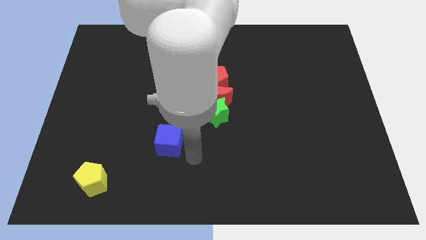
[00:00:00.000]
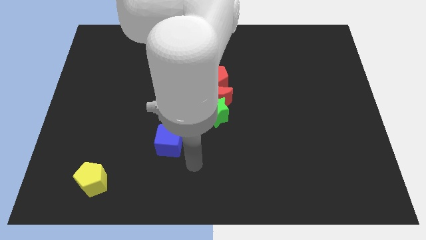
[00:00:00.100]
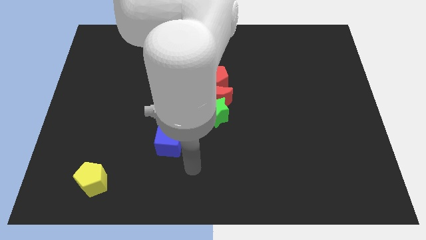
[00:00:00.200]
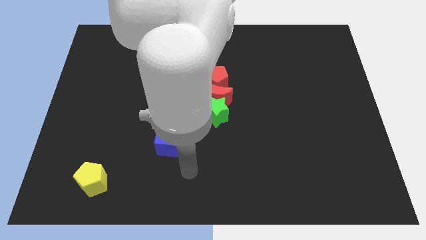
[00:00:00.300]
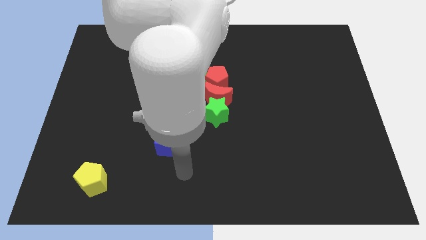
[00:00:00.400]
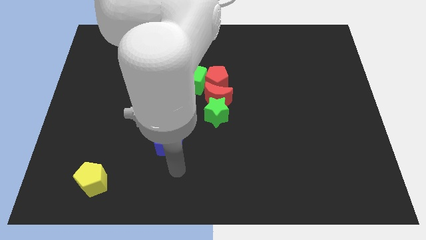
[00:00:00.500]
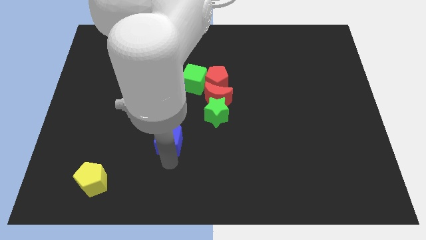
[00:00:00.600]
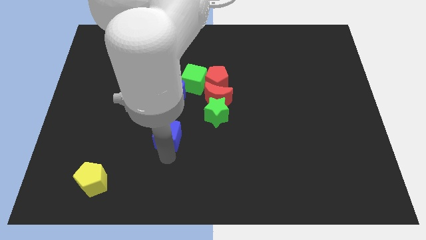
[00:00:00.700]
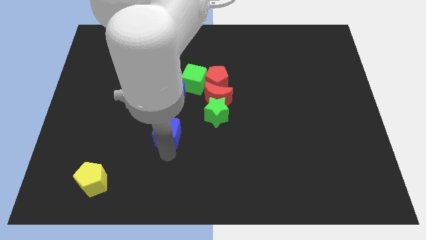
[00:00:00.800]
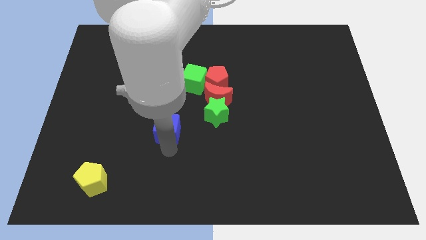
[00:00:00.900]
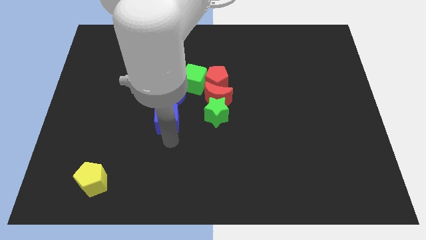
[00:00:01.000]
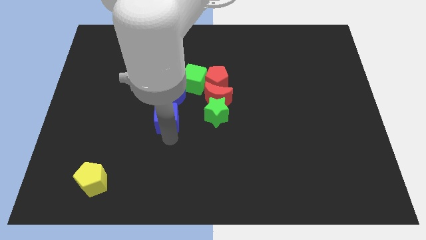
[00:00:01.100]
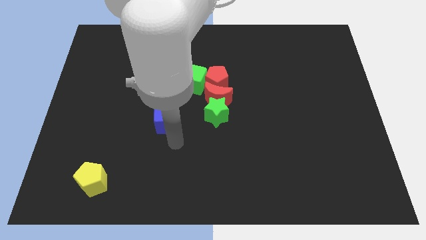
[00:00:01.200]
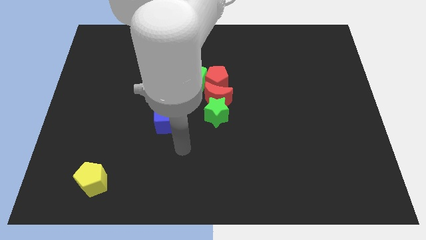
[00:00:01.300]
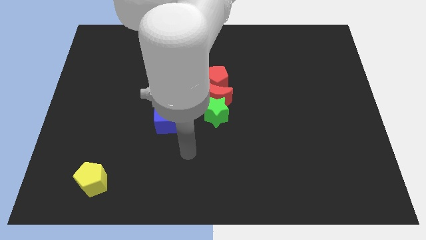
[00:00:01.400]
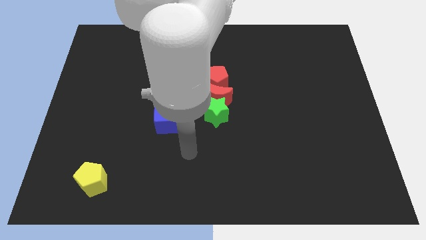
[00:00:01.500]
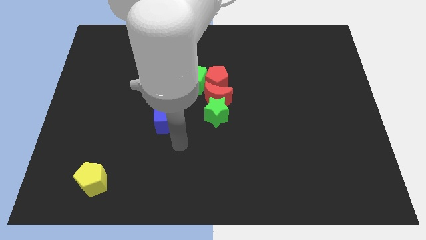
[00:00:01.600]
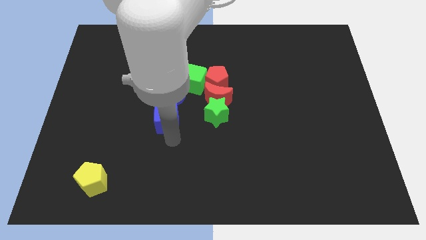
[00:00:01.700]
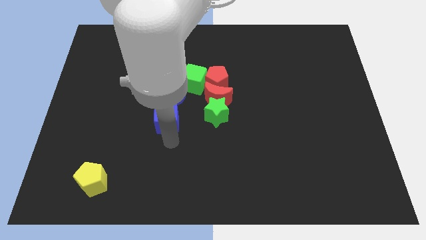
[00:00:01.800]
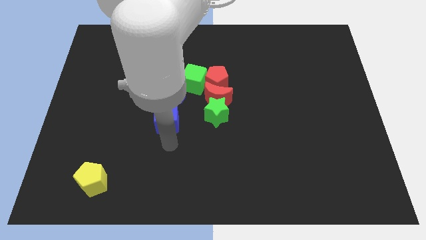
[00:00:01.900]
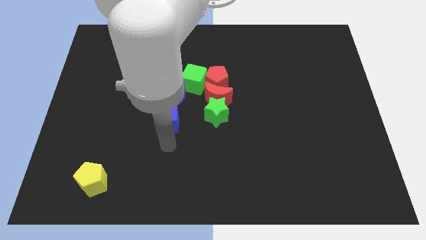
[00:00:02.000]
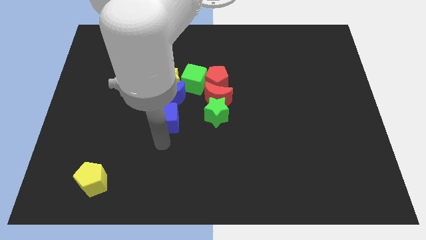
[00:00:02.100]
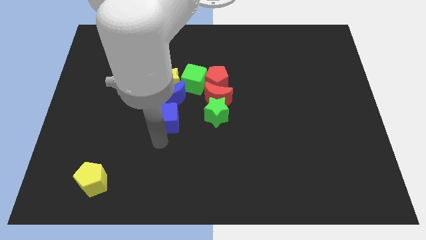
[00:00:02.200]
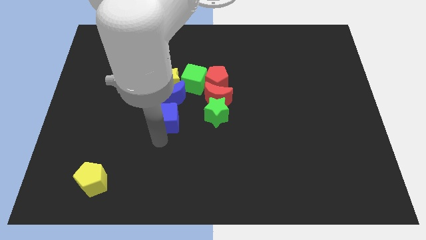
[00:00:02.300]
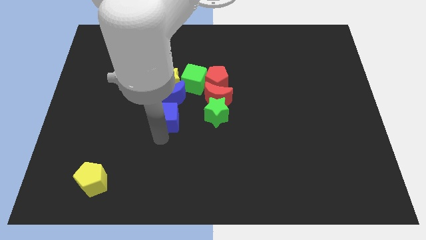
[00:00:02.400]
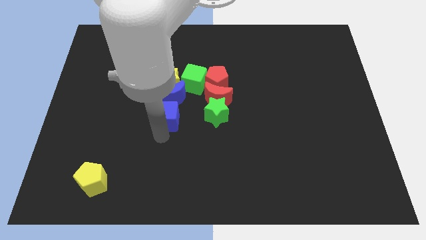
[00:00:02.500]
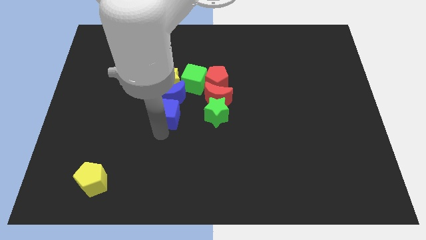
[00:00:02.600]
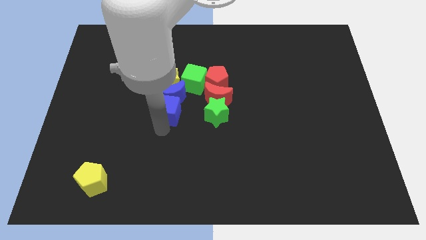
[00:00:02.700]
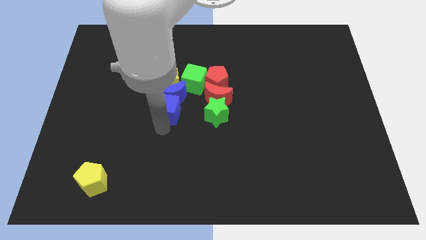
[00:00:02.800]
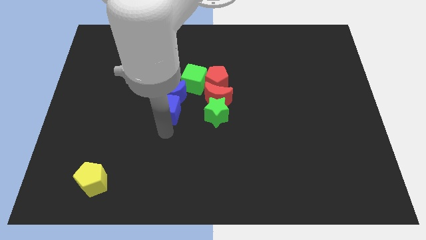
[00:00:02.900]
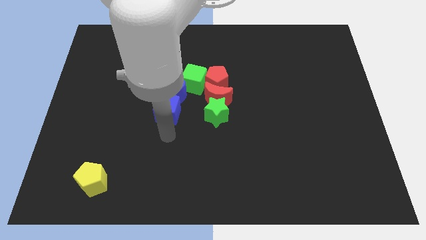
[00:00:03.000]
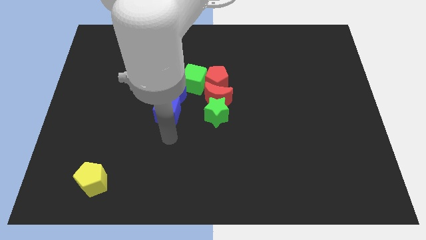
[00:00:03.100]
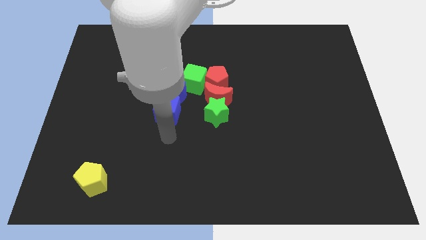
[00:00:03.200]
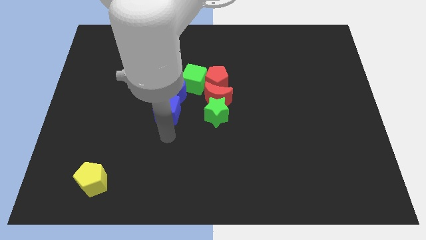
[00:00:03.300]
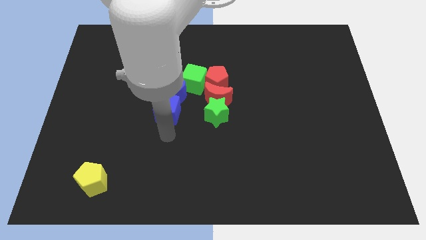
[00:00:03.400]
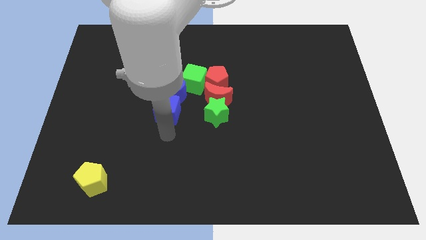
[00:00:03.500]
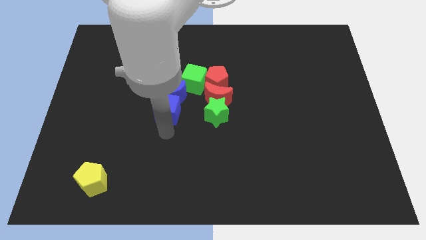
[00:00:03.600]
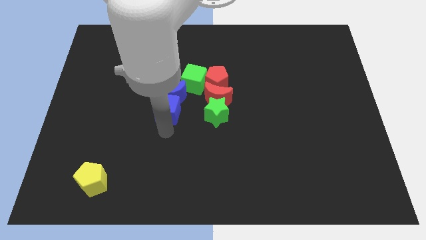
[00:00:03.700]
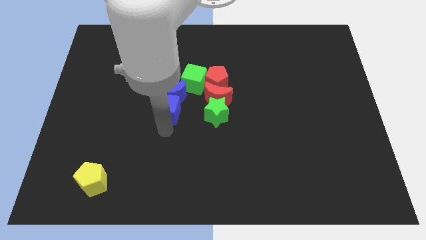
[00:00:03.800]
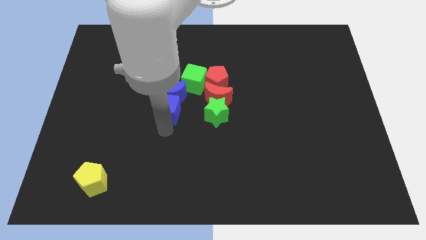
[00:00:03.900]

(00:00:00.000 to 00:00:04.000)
place blue cube at the bottom of the blue moon

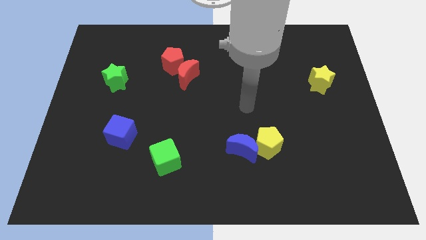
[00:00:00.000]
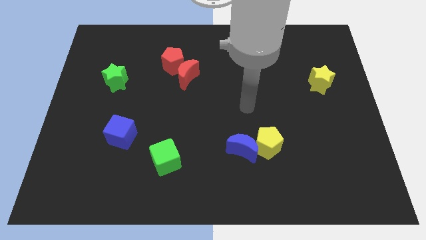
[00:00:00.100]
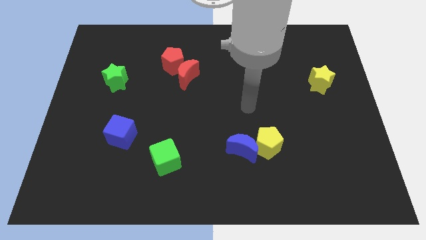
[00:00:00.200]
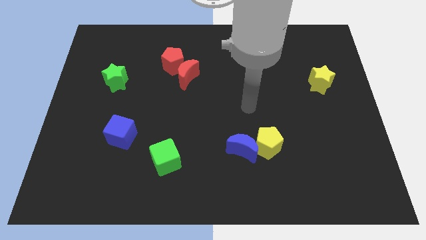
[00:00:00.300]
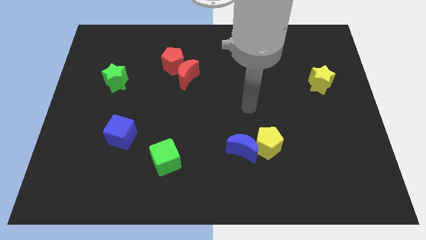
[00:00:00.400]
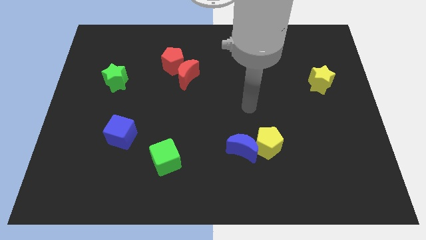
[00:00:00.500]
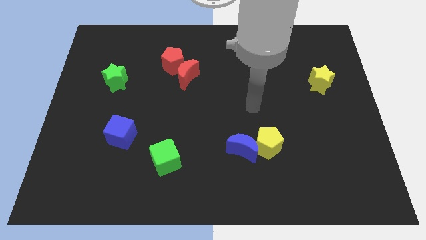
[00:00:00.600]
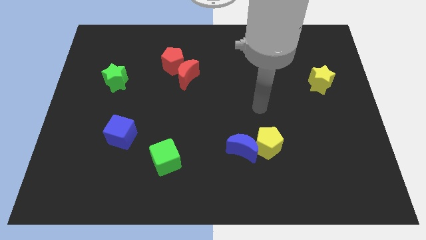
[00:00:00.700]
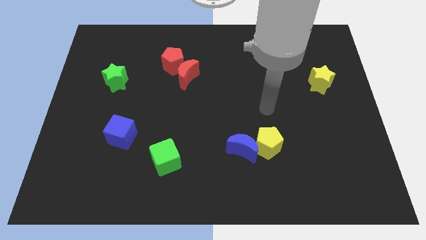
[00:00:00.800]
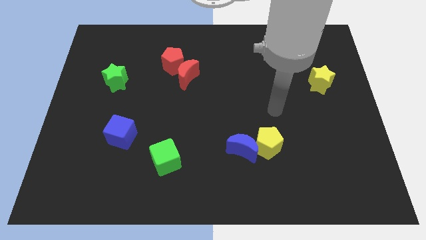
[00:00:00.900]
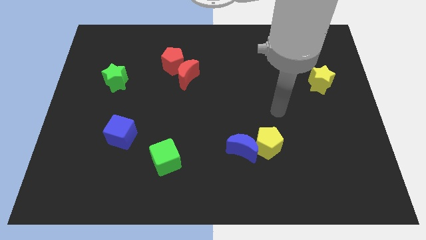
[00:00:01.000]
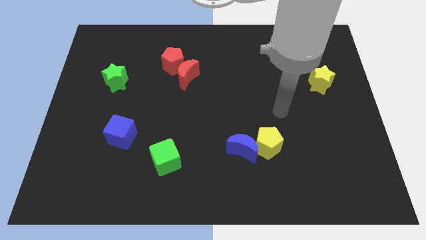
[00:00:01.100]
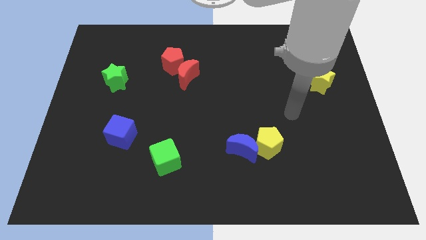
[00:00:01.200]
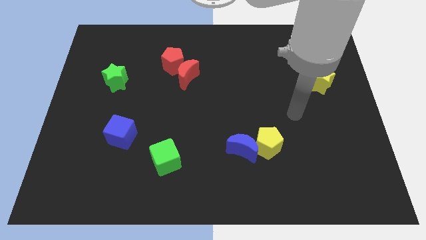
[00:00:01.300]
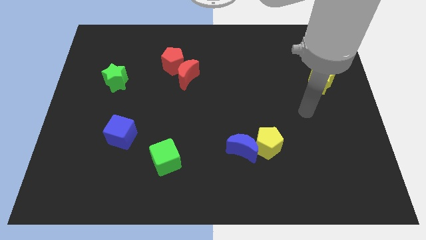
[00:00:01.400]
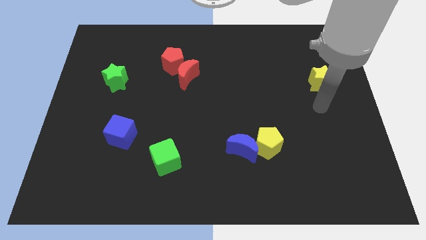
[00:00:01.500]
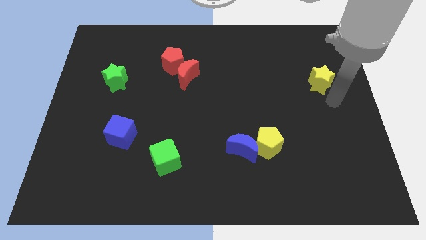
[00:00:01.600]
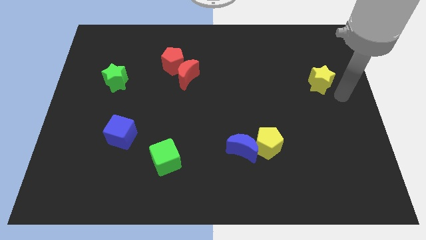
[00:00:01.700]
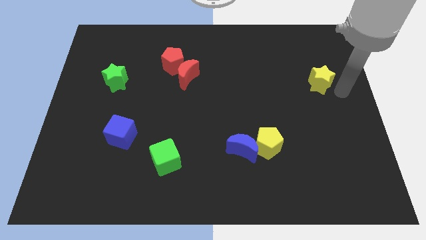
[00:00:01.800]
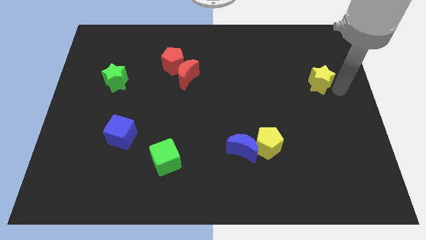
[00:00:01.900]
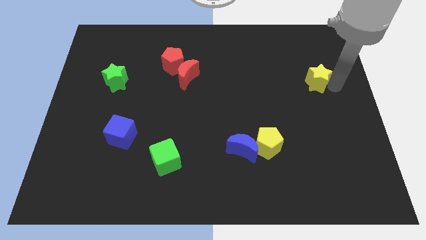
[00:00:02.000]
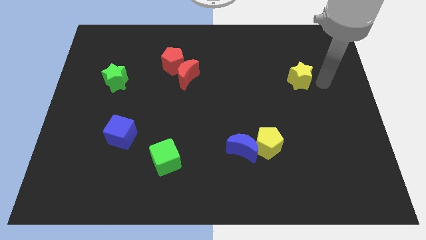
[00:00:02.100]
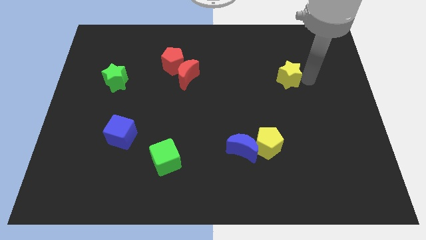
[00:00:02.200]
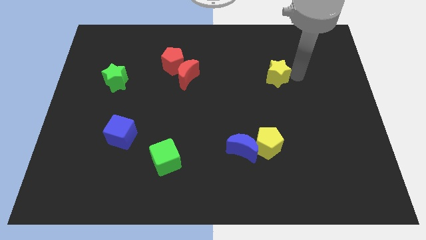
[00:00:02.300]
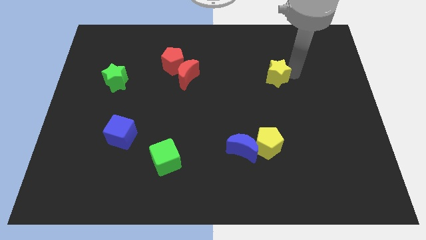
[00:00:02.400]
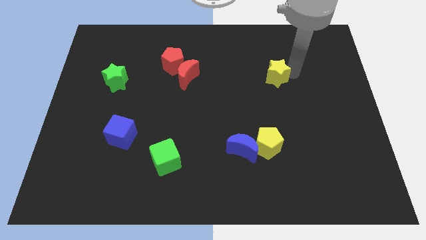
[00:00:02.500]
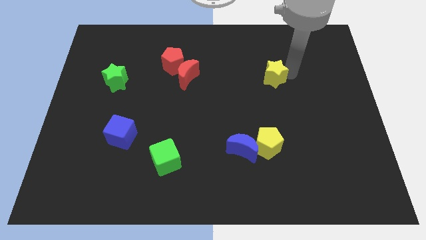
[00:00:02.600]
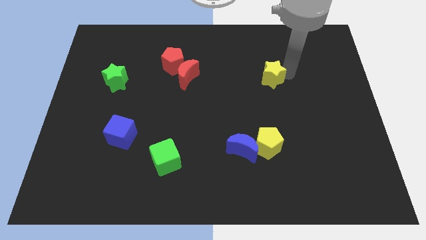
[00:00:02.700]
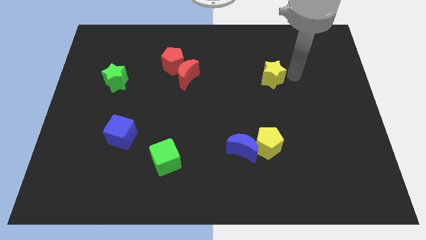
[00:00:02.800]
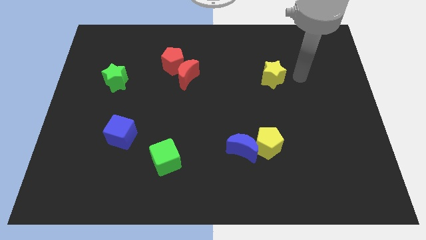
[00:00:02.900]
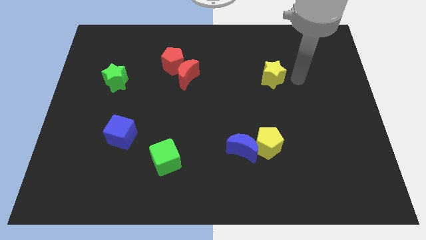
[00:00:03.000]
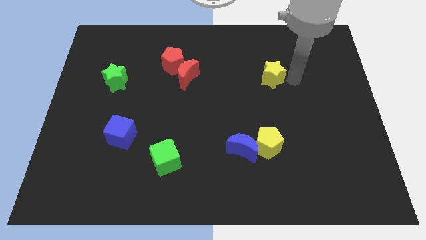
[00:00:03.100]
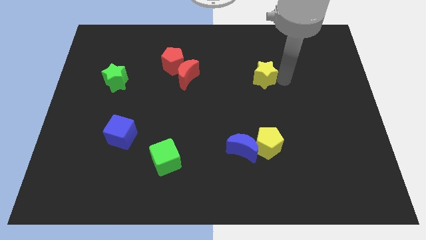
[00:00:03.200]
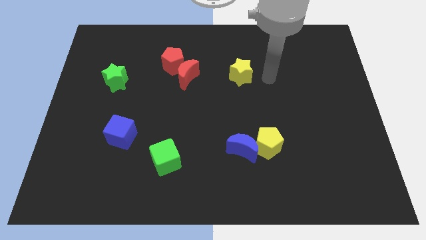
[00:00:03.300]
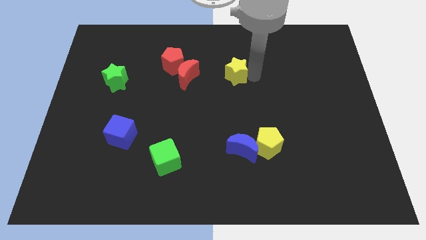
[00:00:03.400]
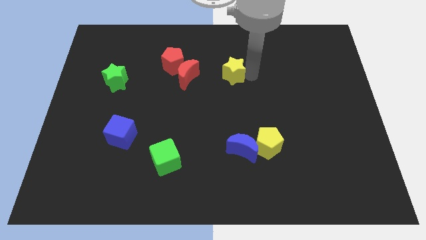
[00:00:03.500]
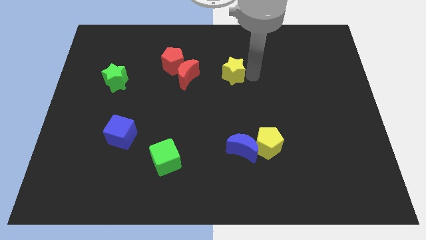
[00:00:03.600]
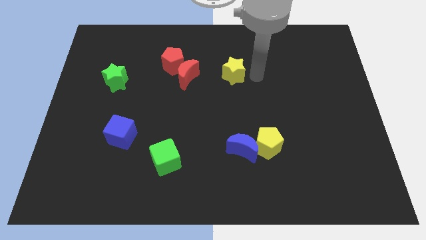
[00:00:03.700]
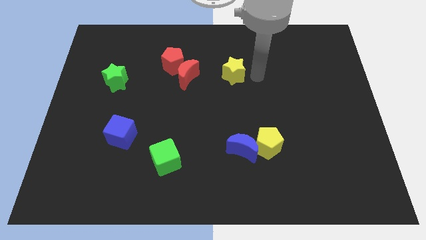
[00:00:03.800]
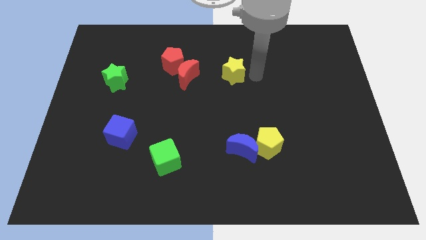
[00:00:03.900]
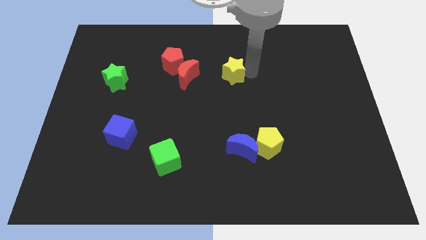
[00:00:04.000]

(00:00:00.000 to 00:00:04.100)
move the yellow star to the left of the board

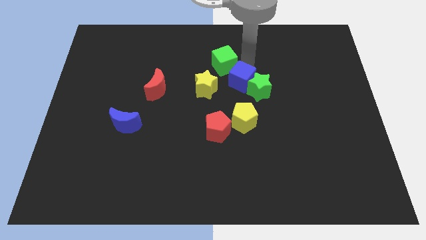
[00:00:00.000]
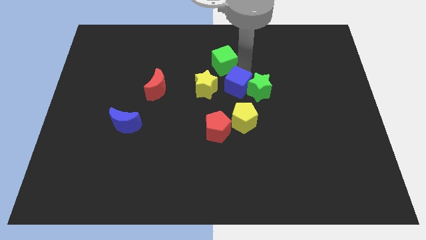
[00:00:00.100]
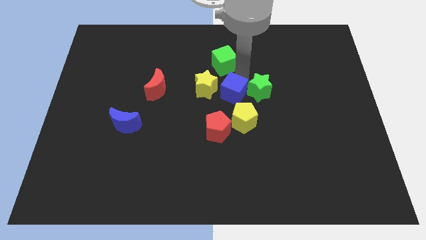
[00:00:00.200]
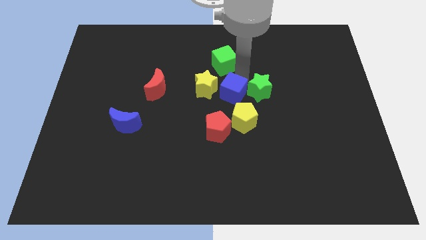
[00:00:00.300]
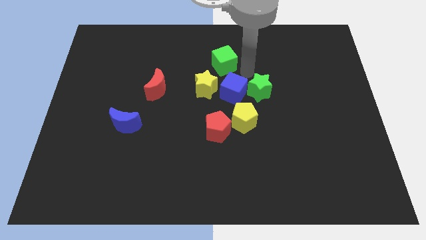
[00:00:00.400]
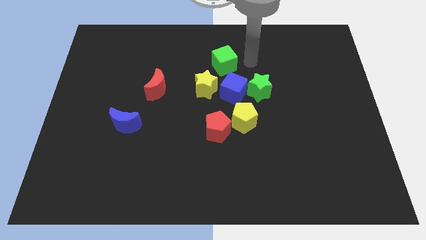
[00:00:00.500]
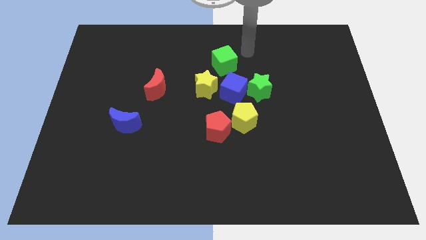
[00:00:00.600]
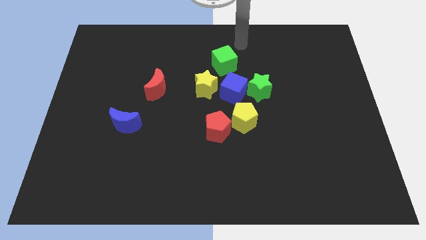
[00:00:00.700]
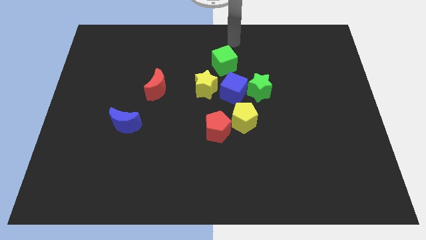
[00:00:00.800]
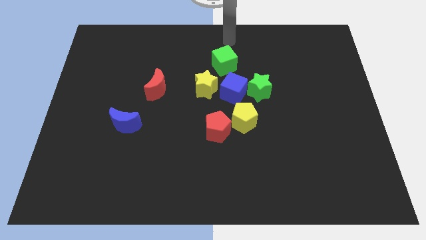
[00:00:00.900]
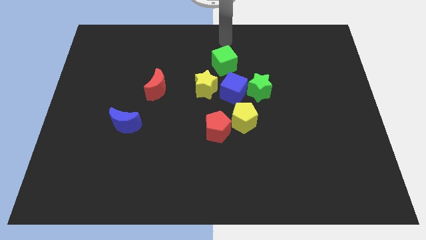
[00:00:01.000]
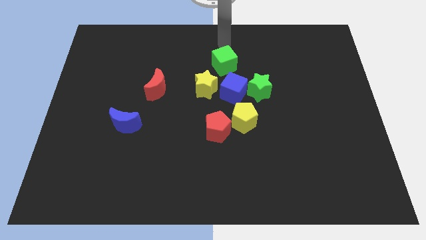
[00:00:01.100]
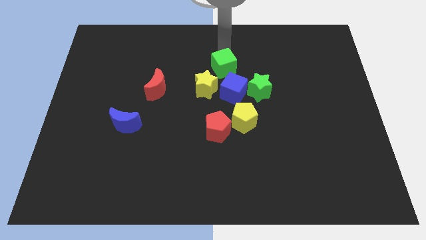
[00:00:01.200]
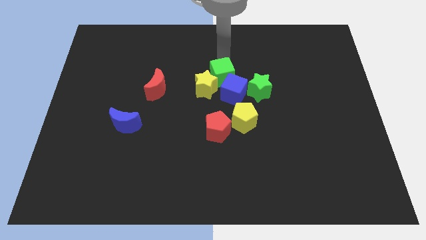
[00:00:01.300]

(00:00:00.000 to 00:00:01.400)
push the green cube into the blue cube
